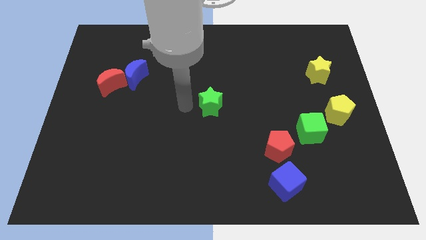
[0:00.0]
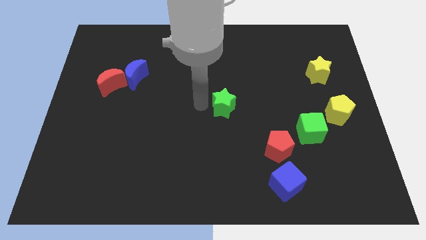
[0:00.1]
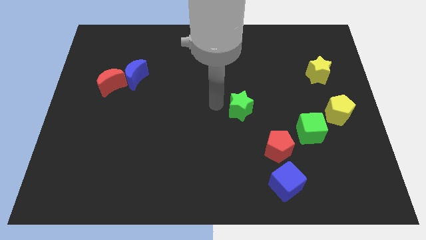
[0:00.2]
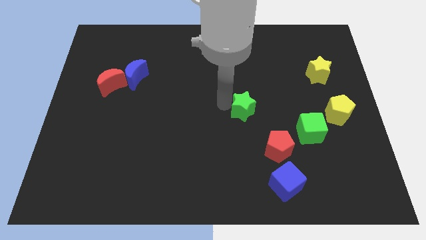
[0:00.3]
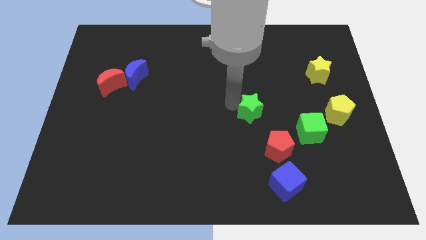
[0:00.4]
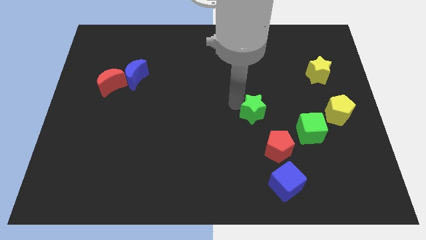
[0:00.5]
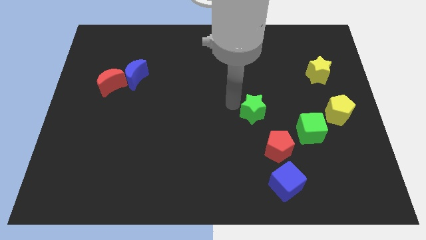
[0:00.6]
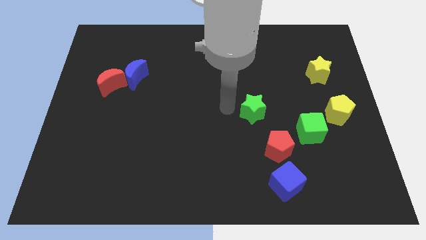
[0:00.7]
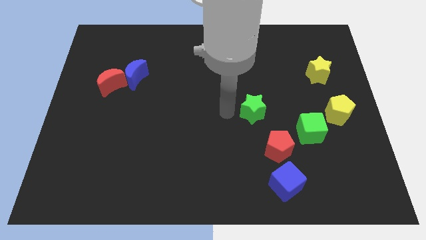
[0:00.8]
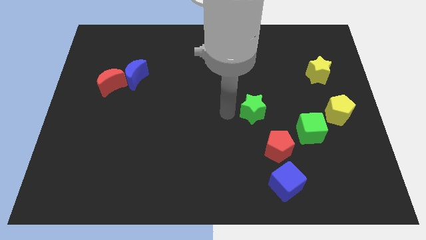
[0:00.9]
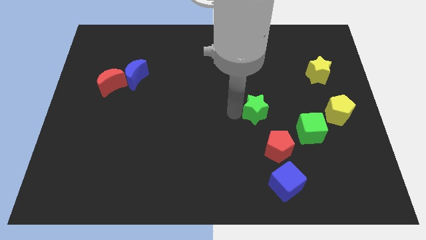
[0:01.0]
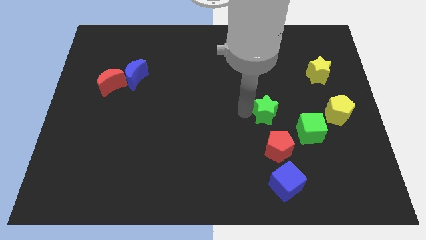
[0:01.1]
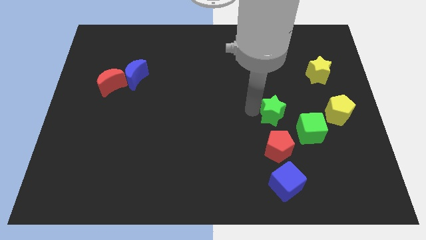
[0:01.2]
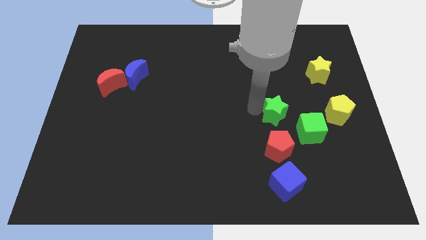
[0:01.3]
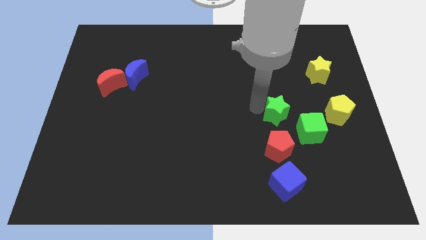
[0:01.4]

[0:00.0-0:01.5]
push green star above red pentagon

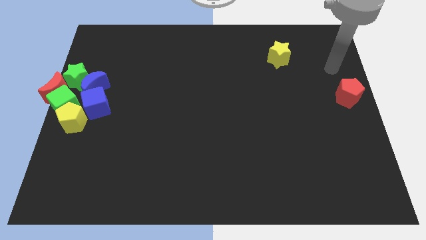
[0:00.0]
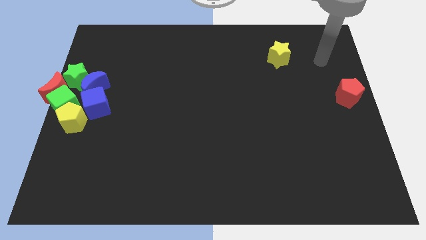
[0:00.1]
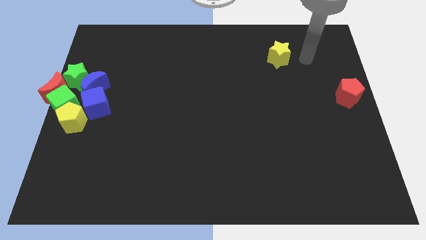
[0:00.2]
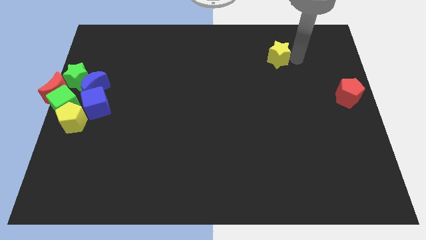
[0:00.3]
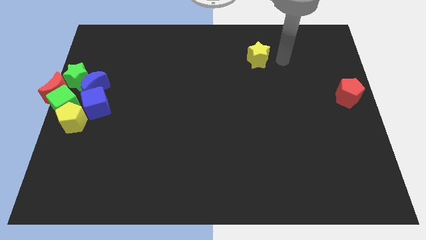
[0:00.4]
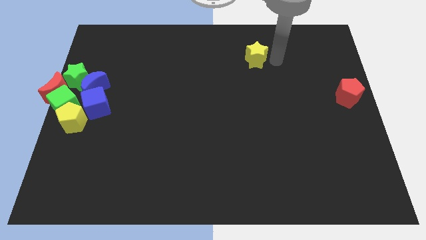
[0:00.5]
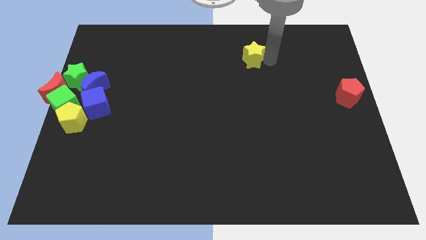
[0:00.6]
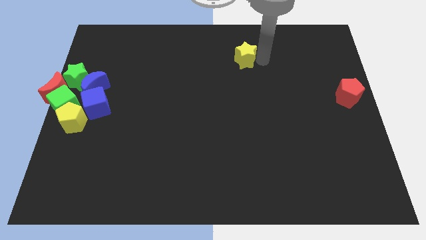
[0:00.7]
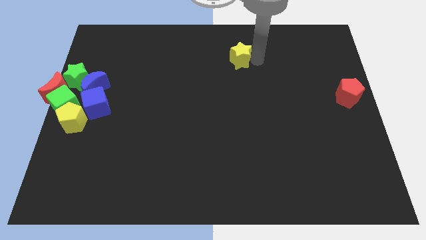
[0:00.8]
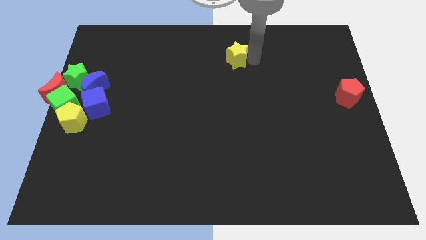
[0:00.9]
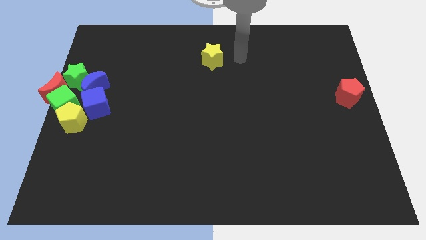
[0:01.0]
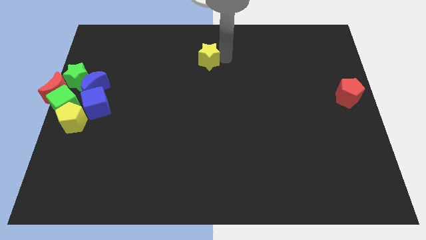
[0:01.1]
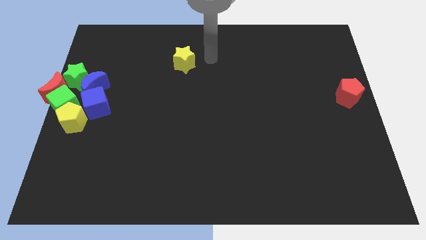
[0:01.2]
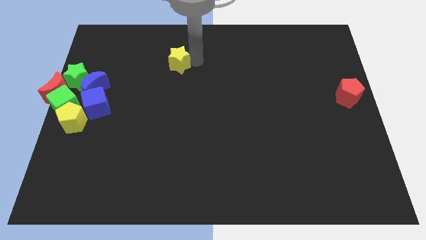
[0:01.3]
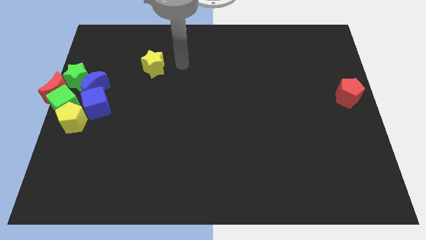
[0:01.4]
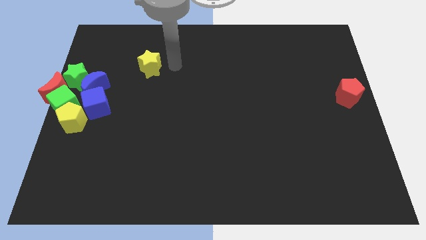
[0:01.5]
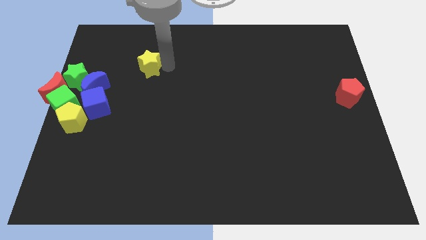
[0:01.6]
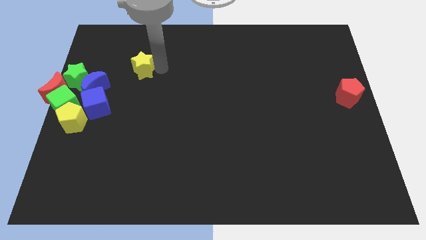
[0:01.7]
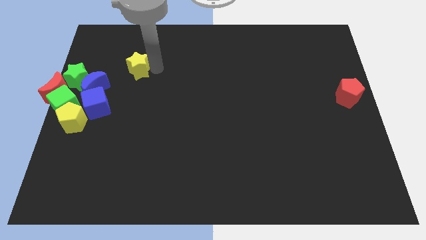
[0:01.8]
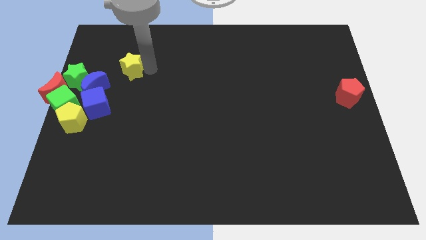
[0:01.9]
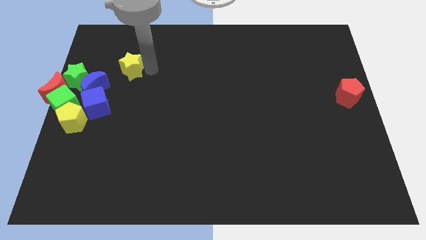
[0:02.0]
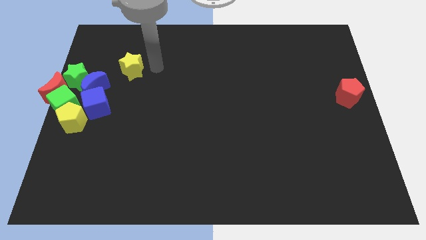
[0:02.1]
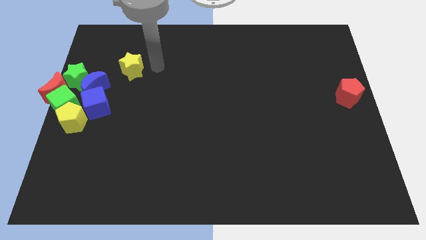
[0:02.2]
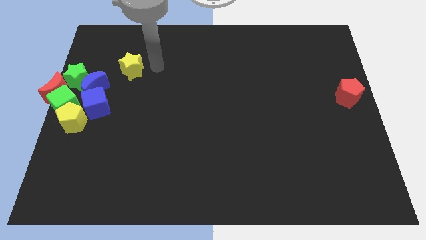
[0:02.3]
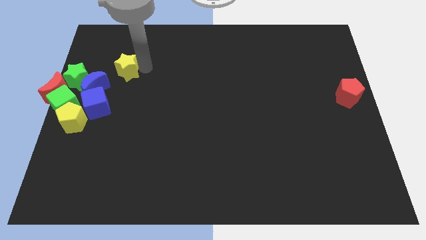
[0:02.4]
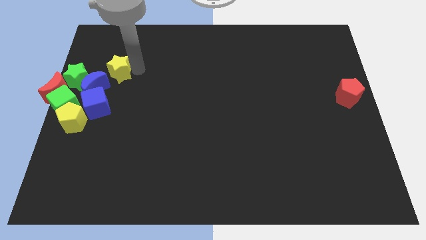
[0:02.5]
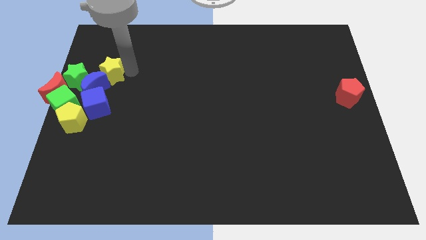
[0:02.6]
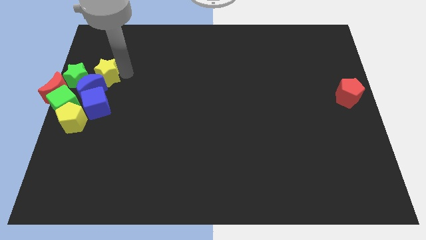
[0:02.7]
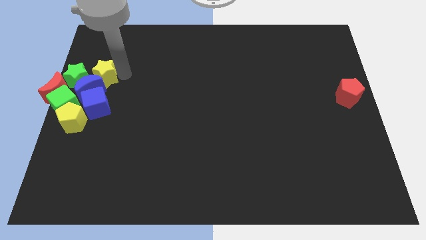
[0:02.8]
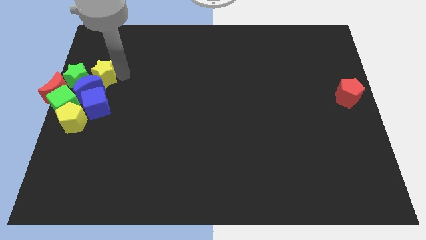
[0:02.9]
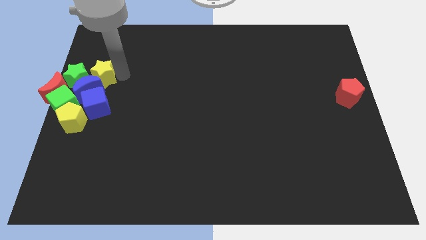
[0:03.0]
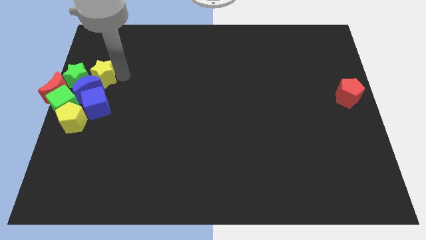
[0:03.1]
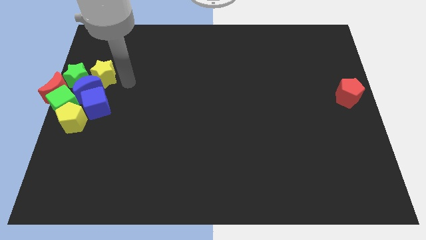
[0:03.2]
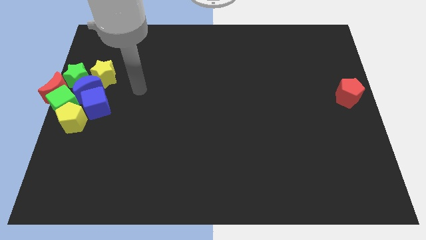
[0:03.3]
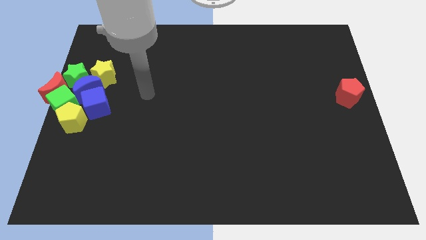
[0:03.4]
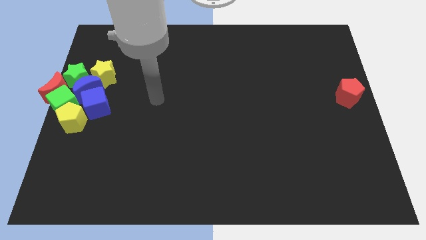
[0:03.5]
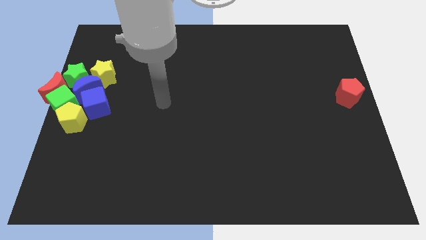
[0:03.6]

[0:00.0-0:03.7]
move the yellow star to the right of the green star

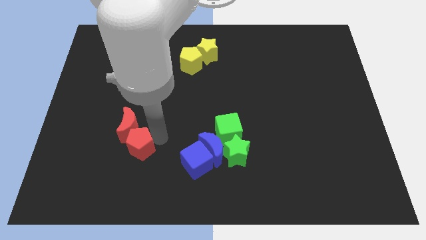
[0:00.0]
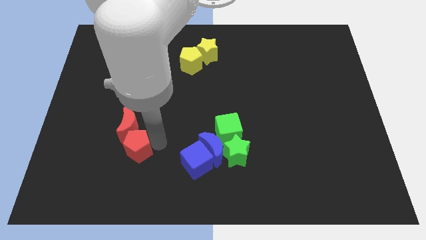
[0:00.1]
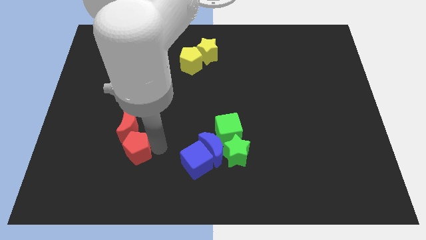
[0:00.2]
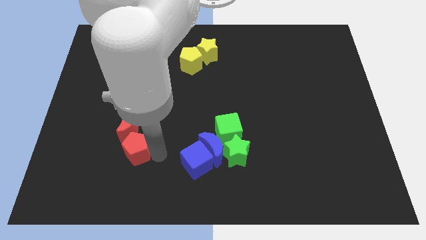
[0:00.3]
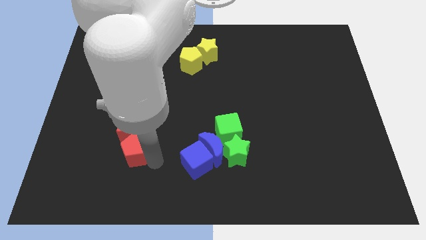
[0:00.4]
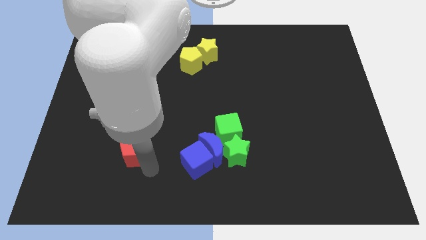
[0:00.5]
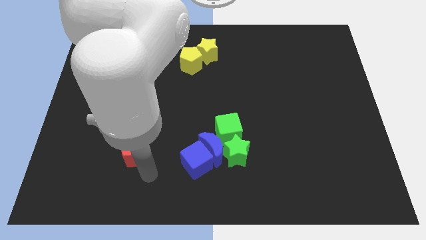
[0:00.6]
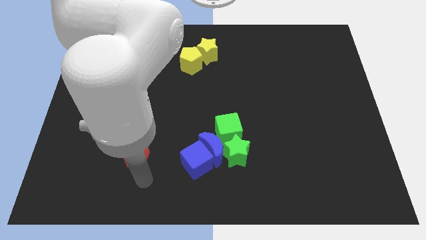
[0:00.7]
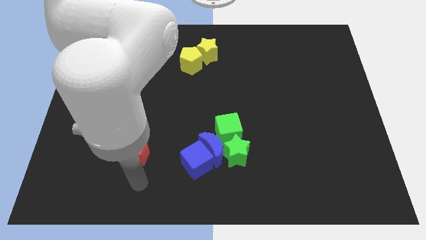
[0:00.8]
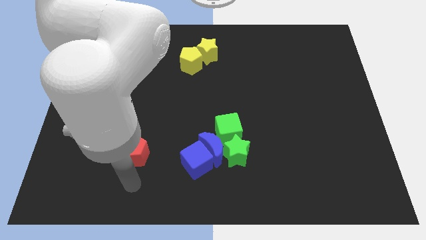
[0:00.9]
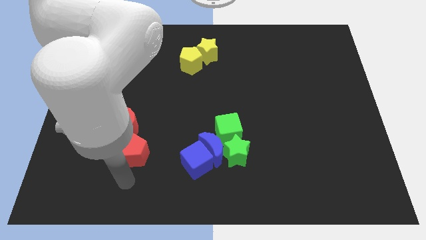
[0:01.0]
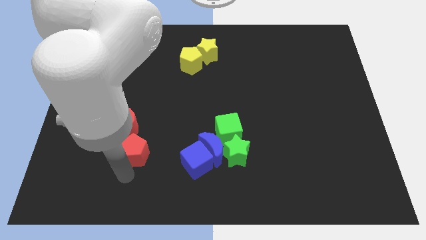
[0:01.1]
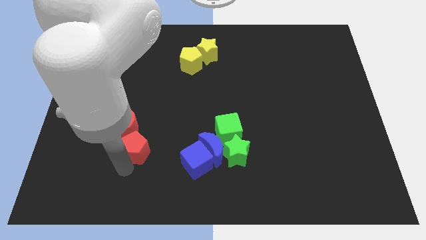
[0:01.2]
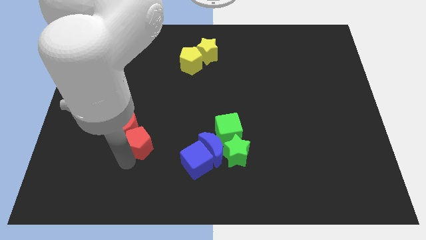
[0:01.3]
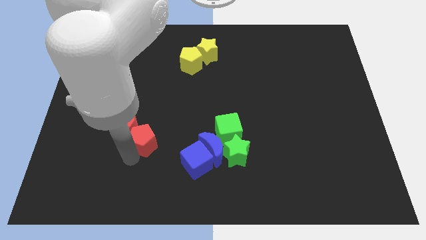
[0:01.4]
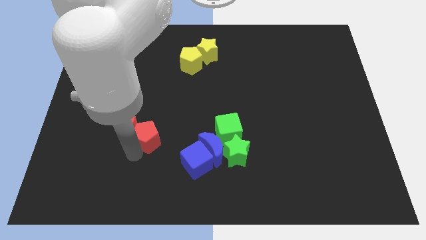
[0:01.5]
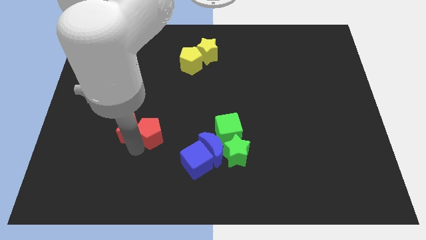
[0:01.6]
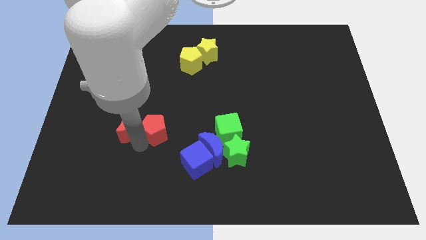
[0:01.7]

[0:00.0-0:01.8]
slide the red pentagon to the right of the red moon

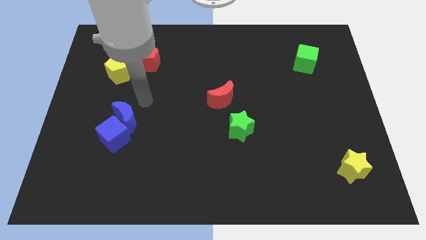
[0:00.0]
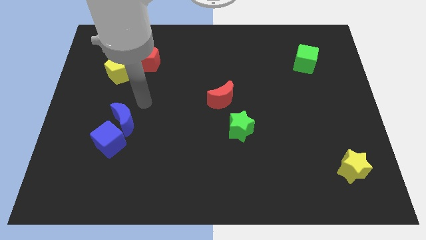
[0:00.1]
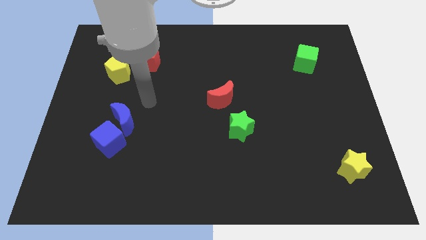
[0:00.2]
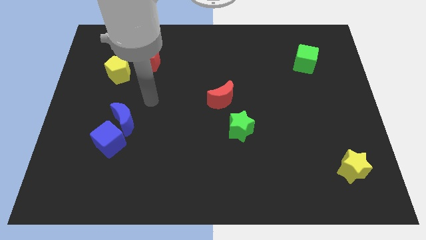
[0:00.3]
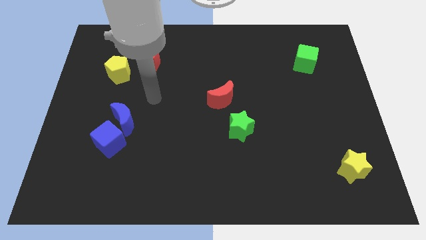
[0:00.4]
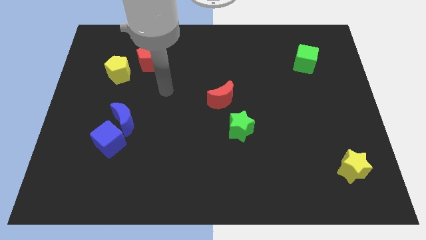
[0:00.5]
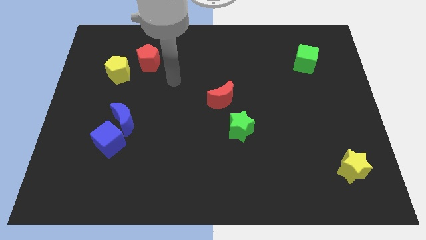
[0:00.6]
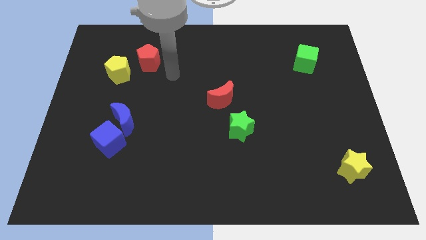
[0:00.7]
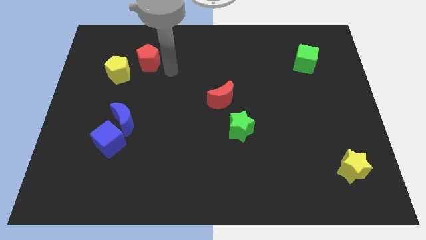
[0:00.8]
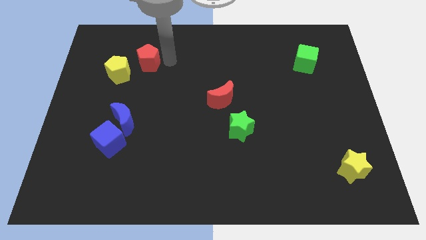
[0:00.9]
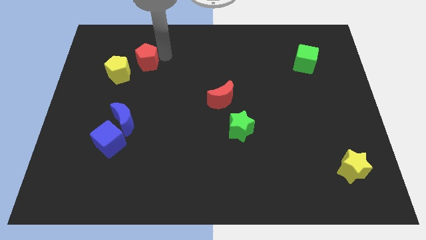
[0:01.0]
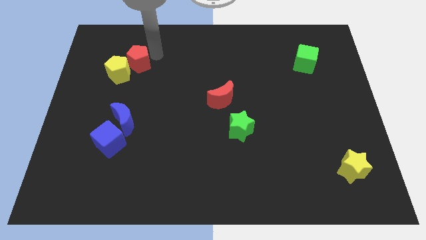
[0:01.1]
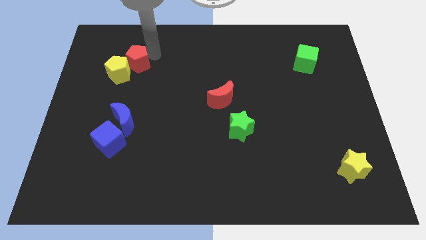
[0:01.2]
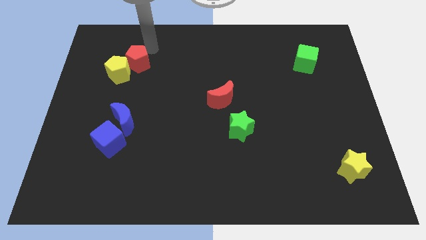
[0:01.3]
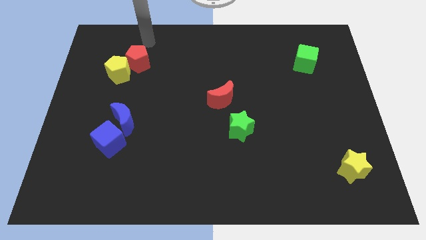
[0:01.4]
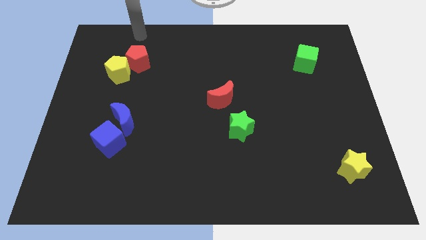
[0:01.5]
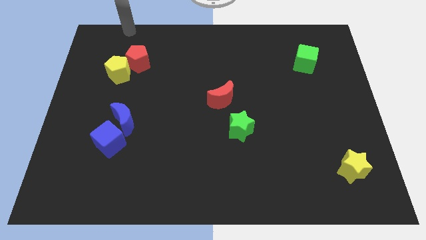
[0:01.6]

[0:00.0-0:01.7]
move the red pentagon into the yellow pentagon

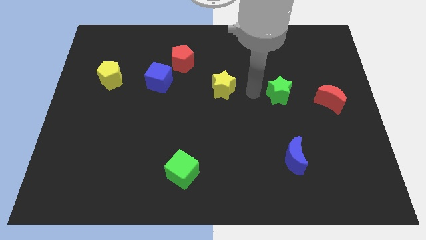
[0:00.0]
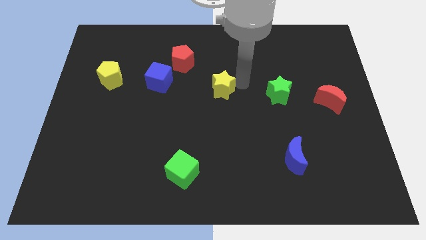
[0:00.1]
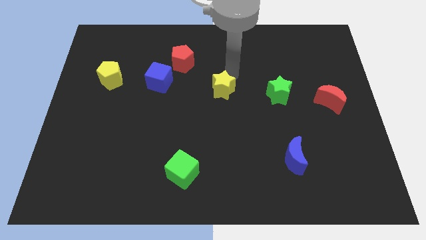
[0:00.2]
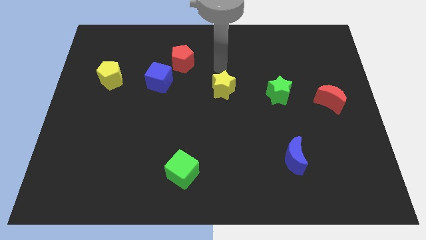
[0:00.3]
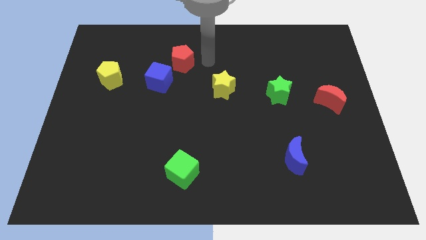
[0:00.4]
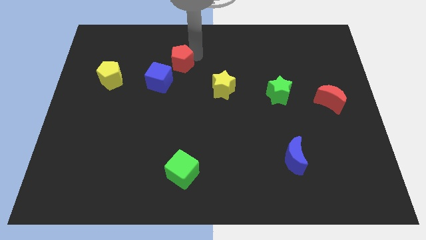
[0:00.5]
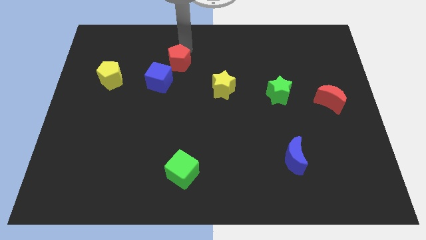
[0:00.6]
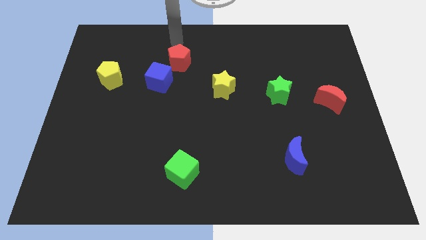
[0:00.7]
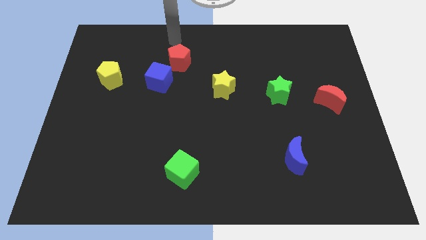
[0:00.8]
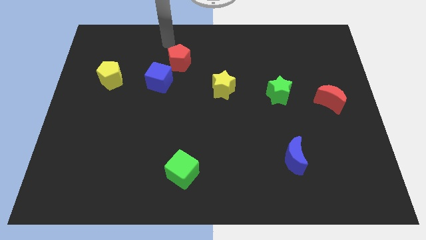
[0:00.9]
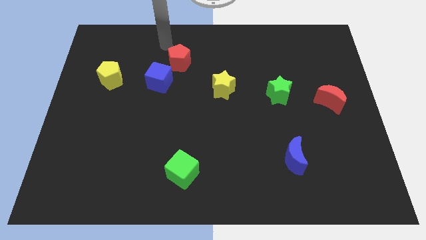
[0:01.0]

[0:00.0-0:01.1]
move the arm to the top left of red pentagon
